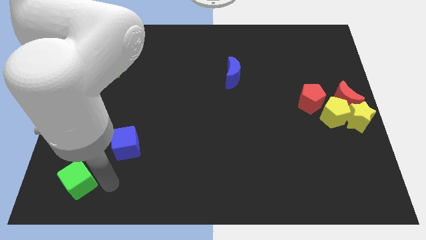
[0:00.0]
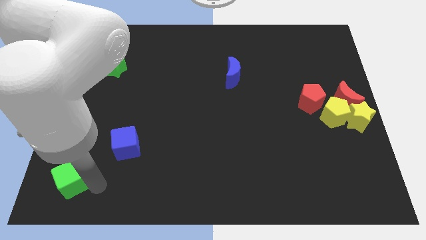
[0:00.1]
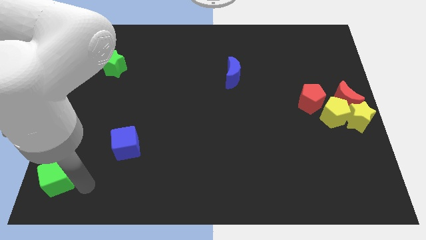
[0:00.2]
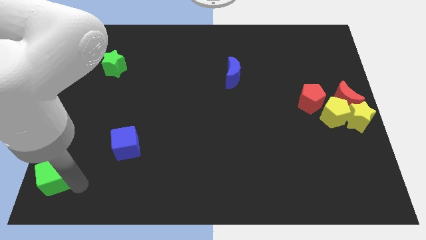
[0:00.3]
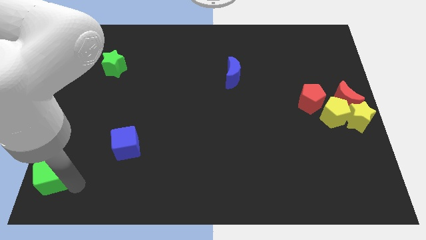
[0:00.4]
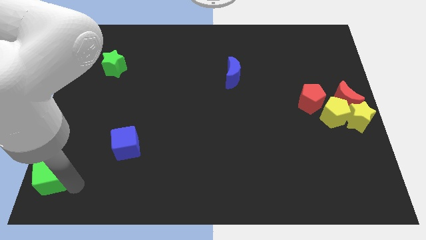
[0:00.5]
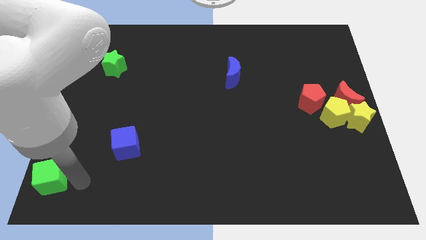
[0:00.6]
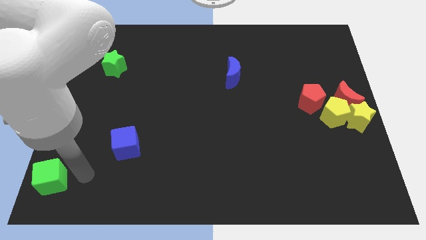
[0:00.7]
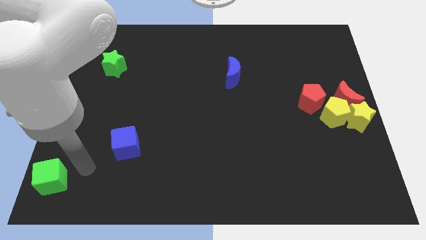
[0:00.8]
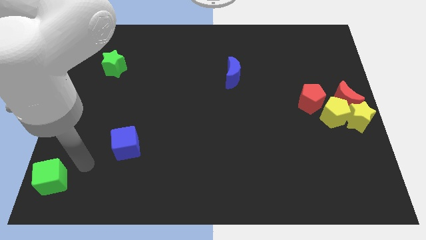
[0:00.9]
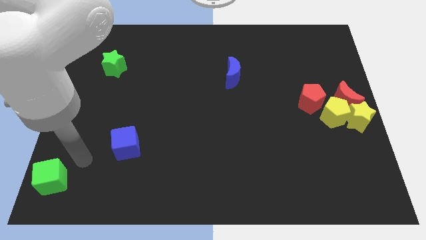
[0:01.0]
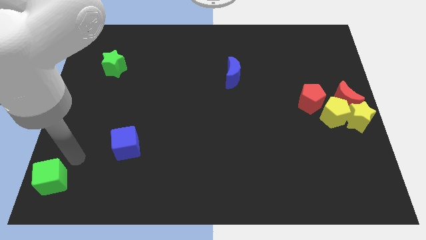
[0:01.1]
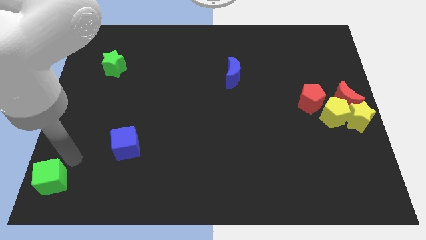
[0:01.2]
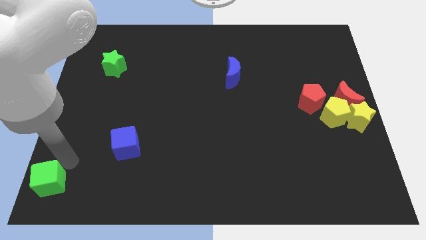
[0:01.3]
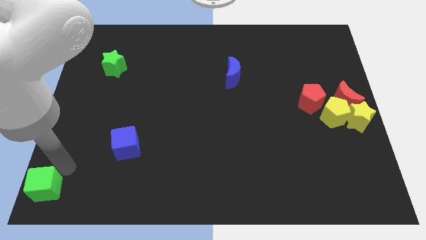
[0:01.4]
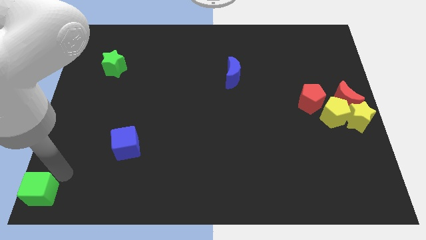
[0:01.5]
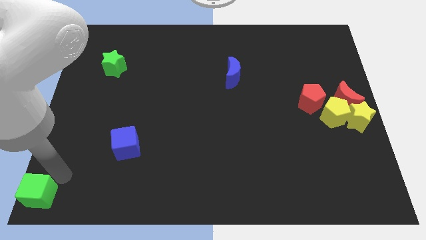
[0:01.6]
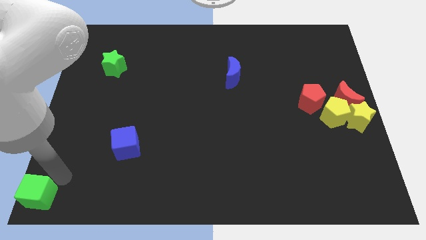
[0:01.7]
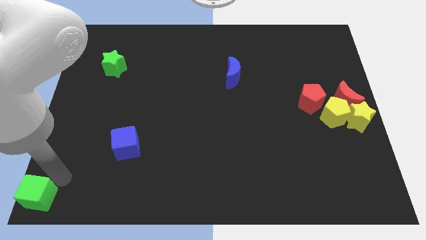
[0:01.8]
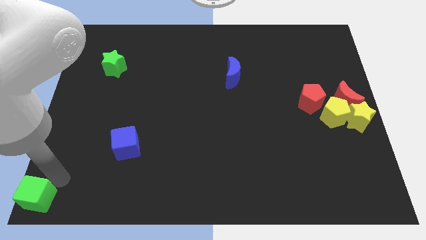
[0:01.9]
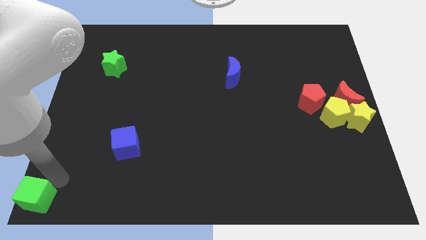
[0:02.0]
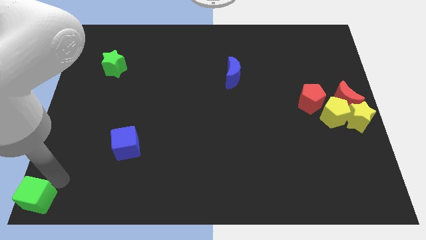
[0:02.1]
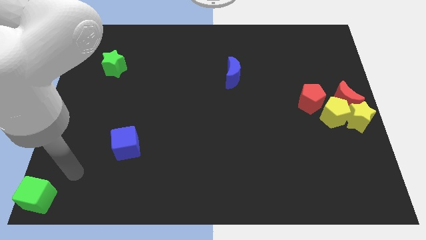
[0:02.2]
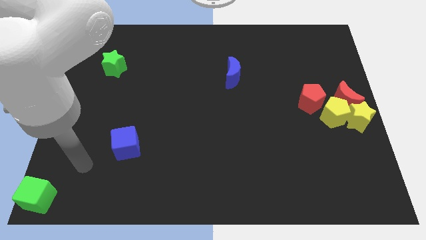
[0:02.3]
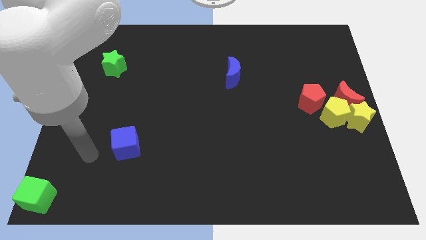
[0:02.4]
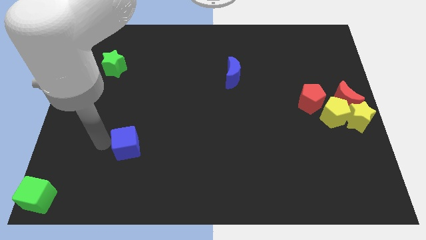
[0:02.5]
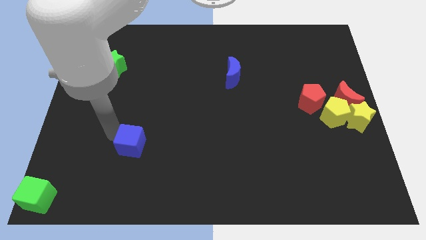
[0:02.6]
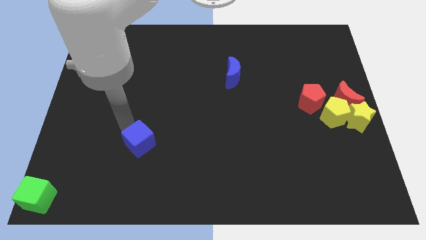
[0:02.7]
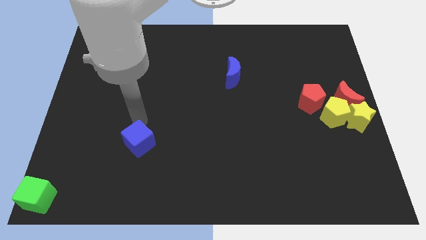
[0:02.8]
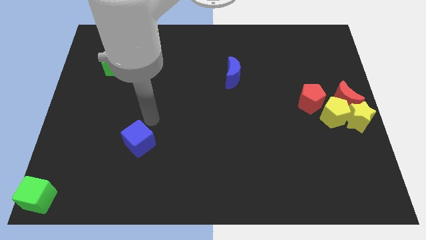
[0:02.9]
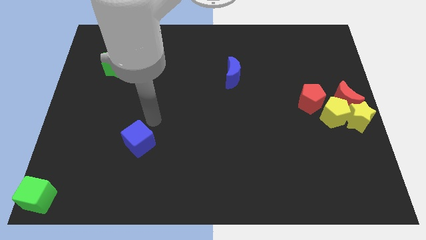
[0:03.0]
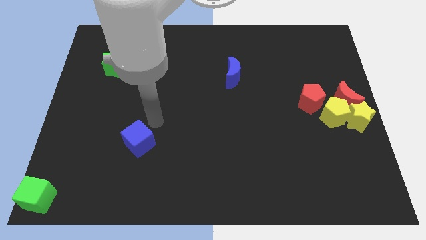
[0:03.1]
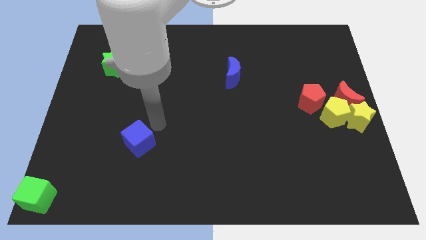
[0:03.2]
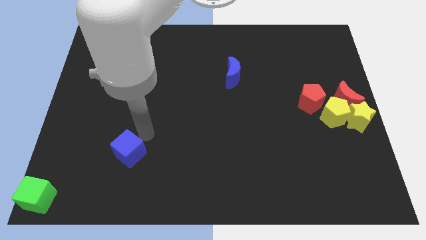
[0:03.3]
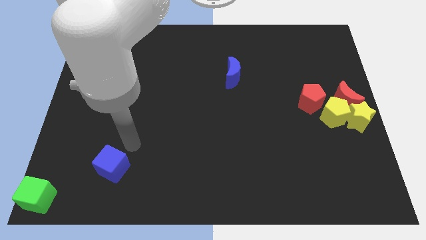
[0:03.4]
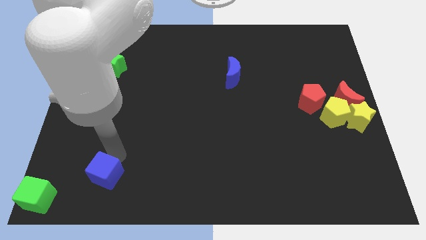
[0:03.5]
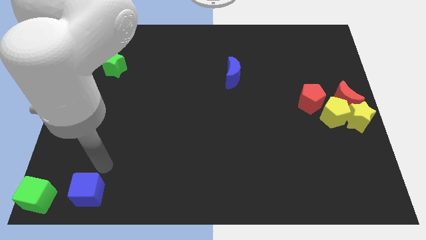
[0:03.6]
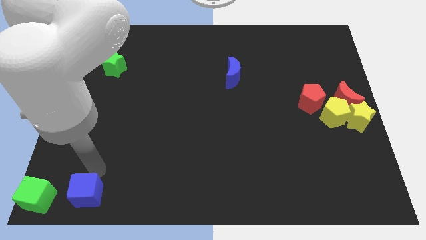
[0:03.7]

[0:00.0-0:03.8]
move the green and blue cube to the bottom left

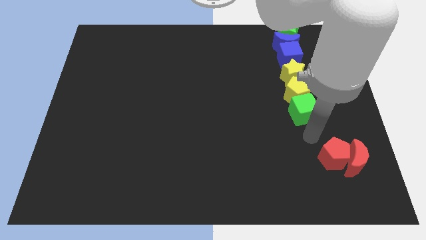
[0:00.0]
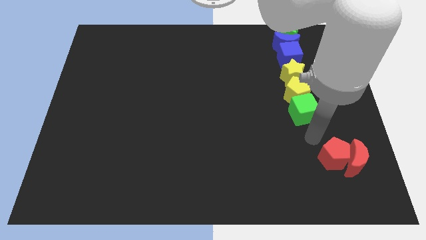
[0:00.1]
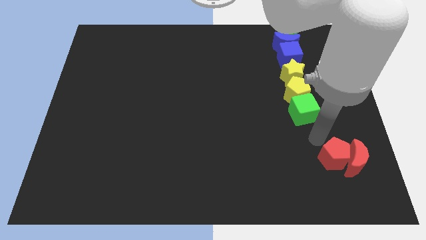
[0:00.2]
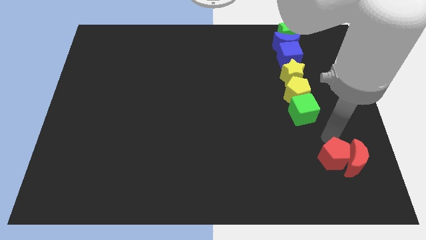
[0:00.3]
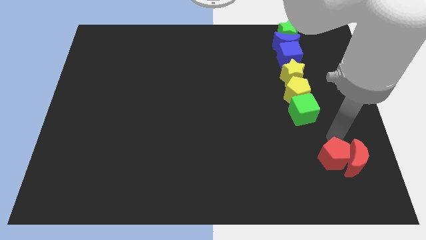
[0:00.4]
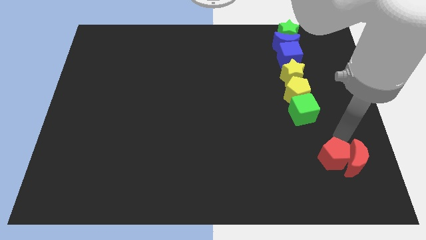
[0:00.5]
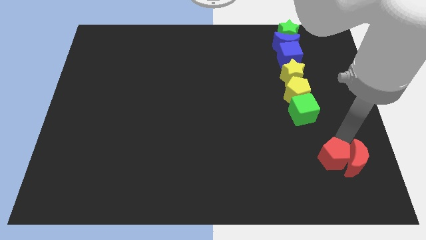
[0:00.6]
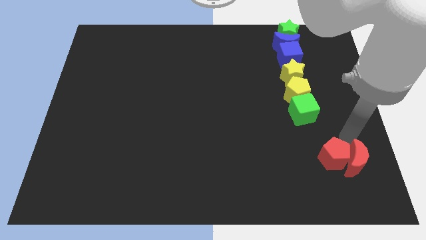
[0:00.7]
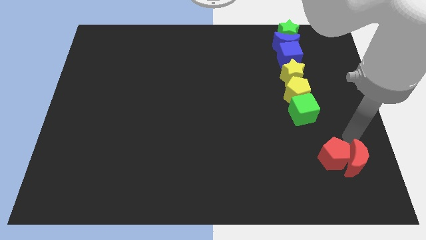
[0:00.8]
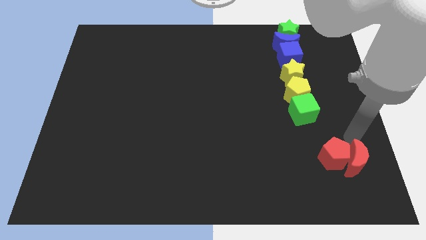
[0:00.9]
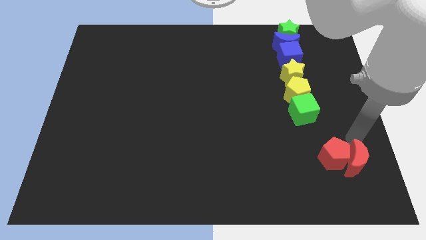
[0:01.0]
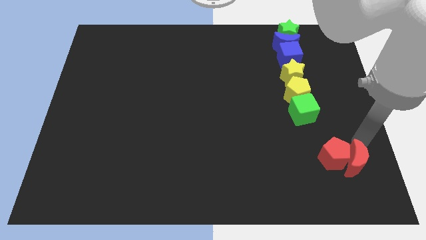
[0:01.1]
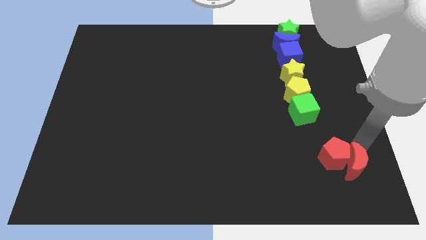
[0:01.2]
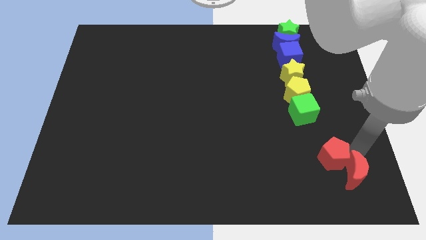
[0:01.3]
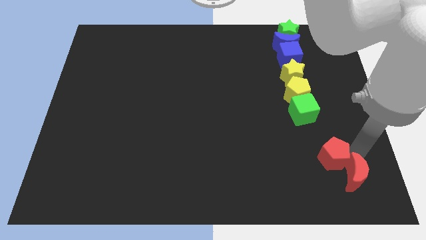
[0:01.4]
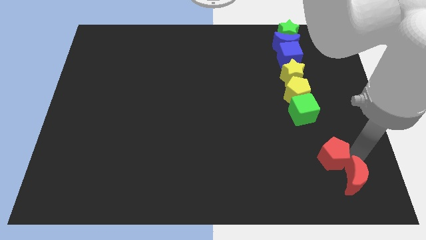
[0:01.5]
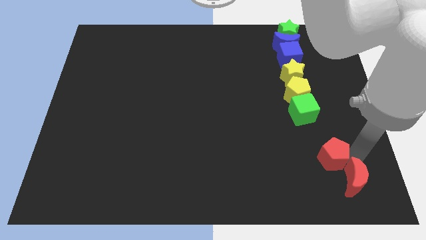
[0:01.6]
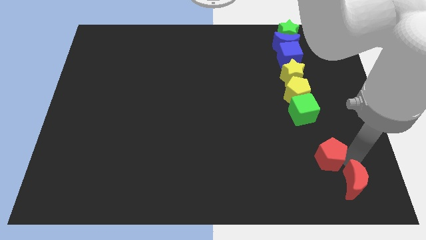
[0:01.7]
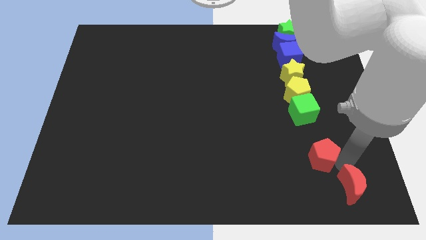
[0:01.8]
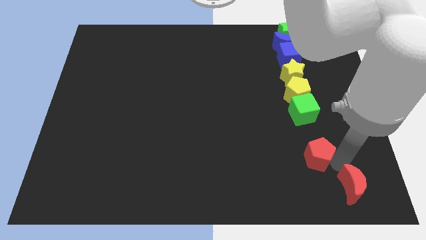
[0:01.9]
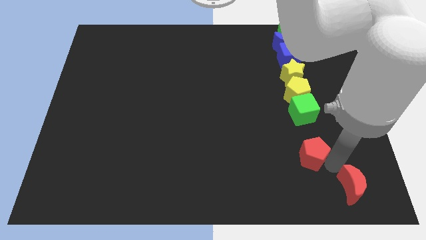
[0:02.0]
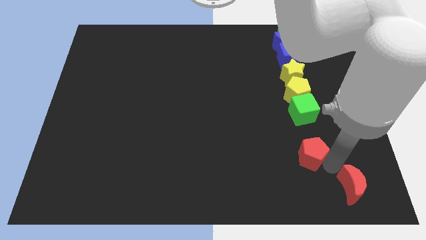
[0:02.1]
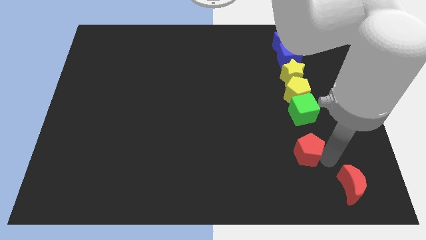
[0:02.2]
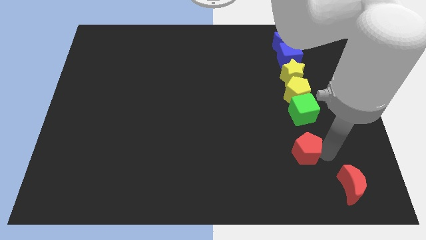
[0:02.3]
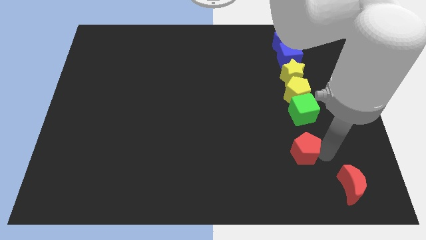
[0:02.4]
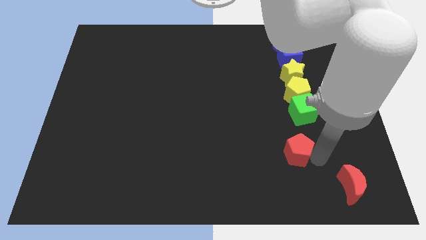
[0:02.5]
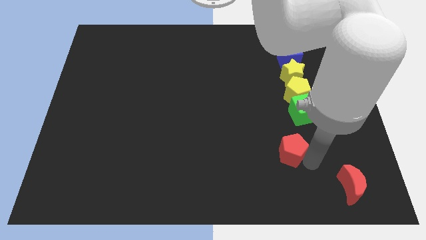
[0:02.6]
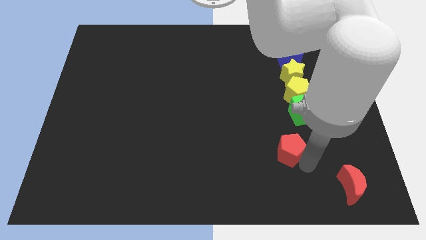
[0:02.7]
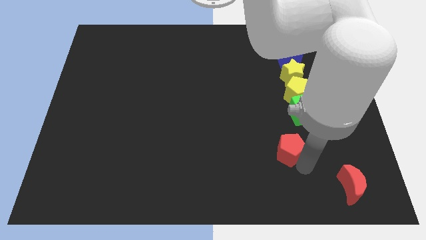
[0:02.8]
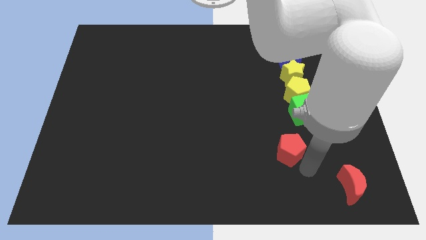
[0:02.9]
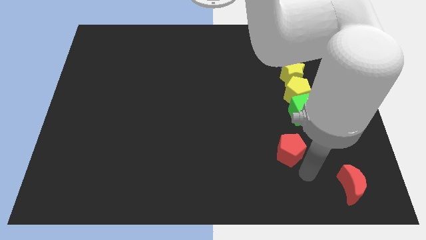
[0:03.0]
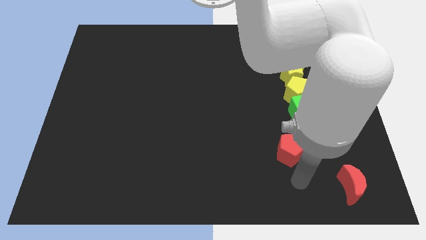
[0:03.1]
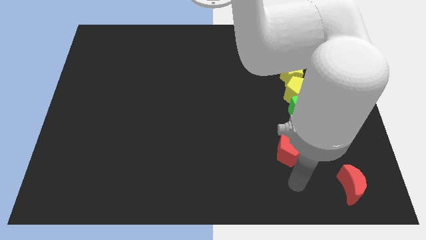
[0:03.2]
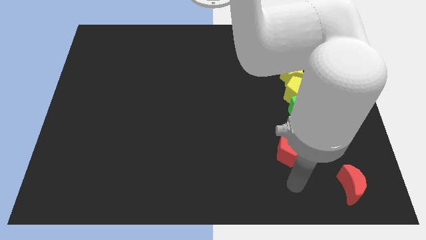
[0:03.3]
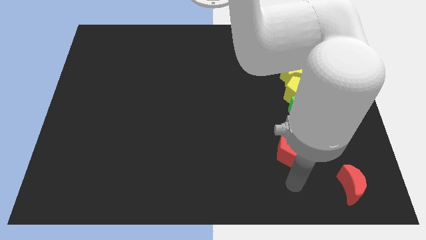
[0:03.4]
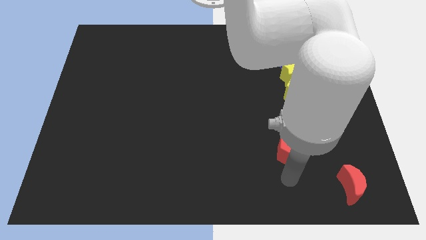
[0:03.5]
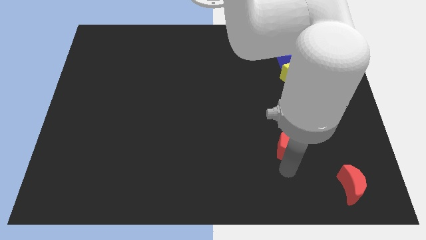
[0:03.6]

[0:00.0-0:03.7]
separate the red blocks from each other

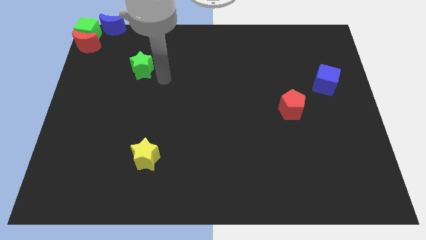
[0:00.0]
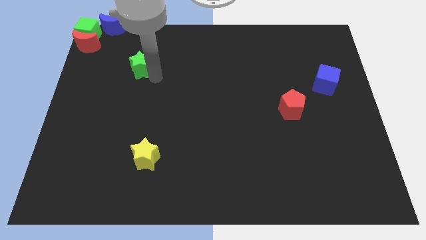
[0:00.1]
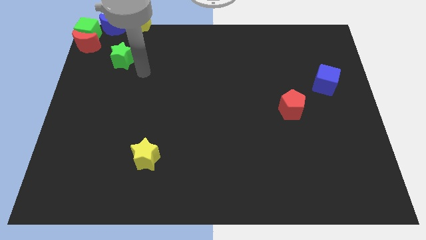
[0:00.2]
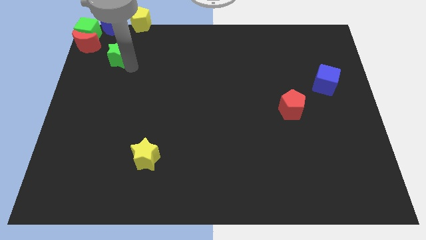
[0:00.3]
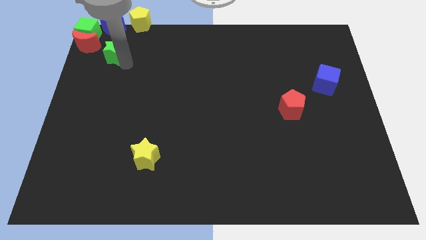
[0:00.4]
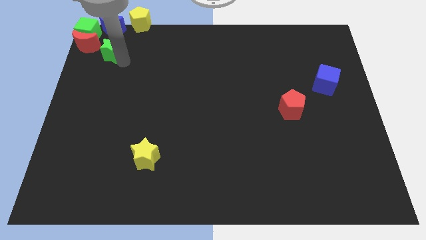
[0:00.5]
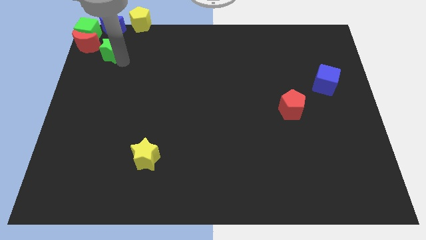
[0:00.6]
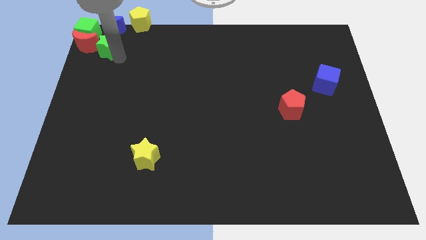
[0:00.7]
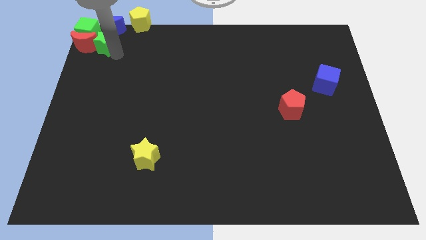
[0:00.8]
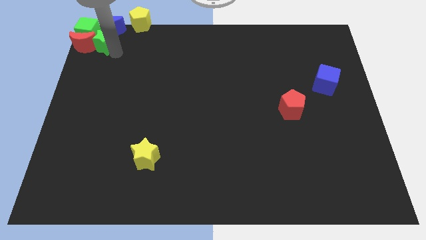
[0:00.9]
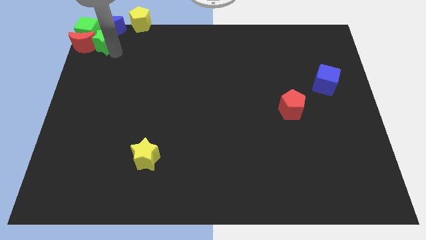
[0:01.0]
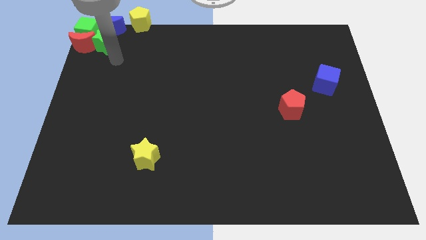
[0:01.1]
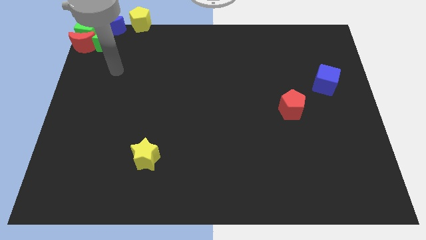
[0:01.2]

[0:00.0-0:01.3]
move the green star into a group of blocks

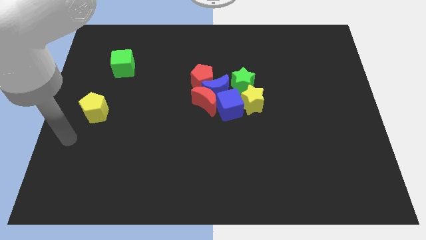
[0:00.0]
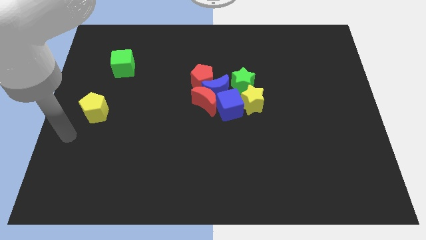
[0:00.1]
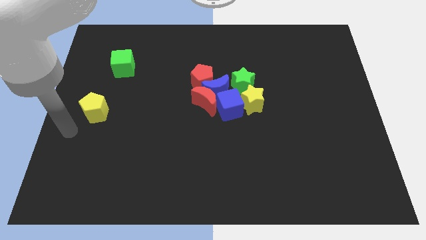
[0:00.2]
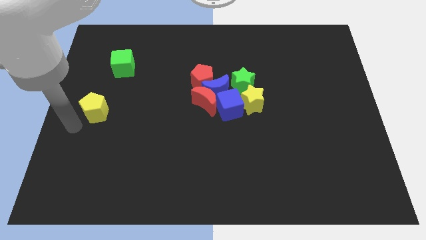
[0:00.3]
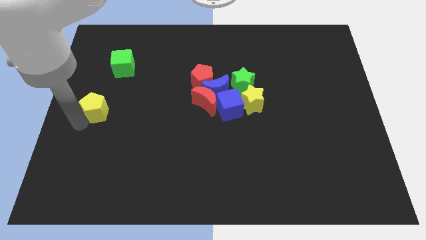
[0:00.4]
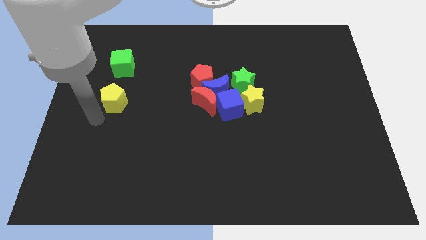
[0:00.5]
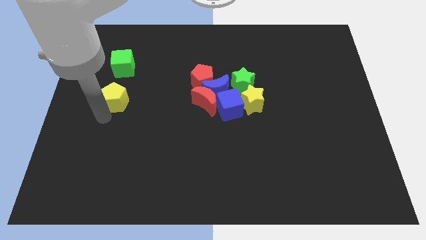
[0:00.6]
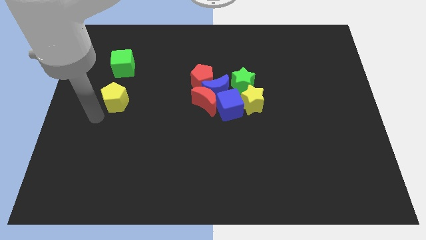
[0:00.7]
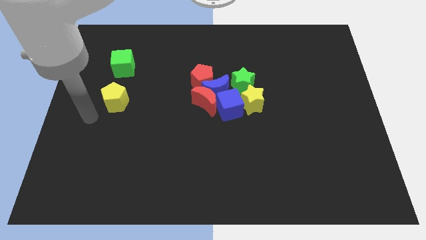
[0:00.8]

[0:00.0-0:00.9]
move the yellow pentagon below the green cube
